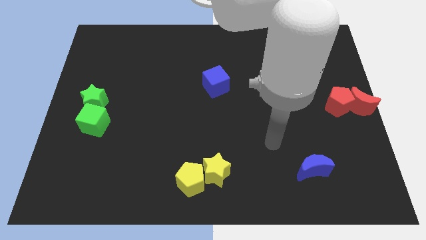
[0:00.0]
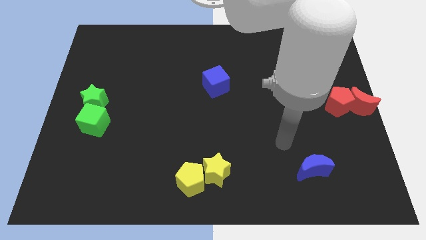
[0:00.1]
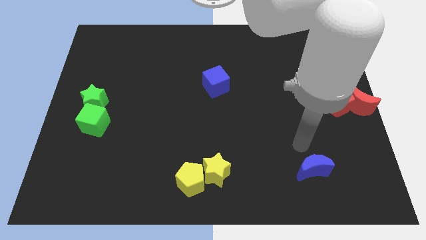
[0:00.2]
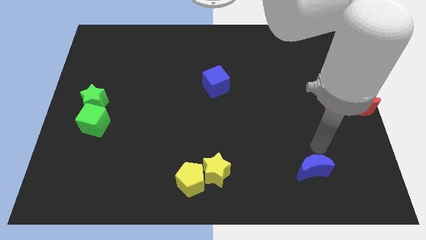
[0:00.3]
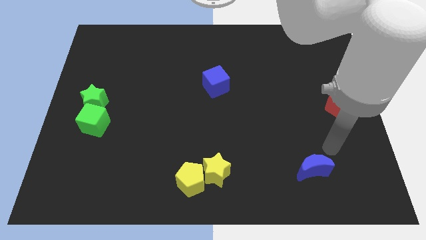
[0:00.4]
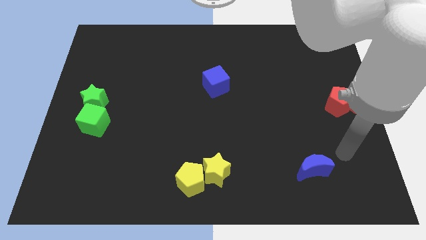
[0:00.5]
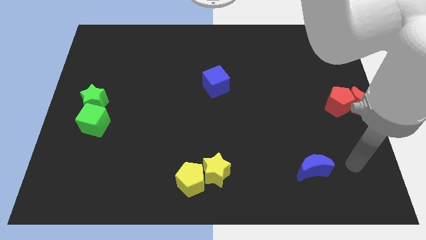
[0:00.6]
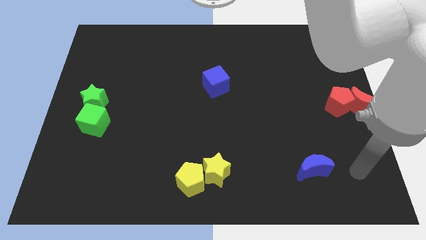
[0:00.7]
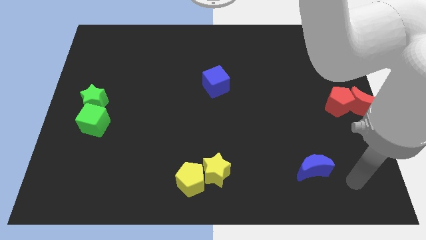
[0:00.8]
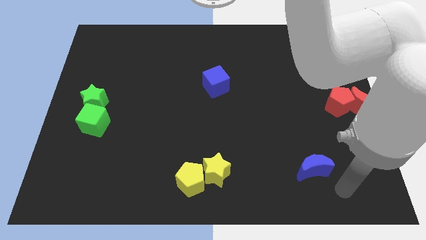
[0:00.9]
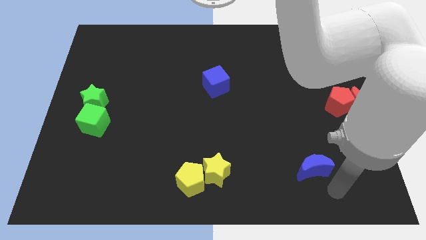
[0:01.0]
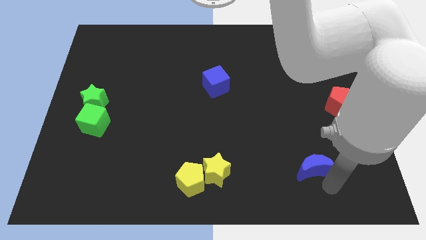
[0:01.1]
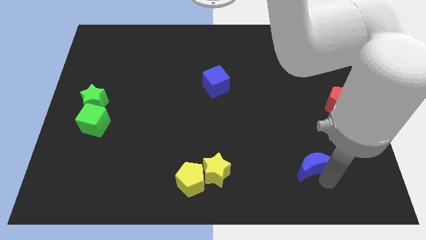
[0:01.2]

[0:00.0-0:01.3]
place the arm into the blue crescent

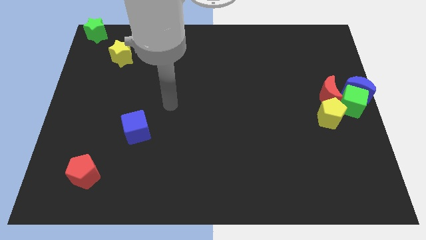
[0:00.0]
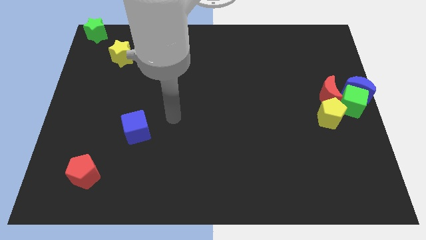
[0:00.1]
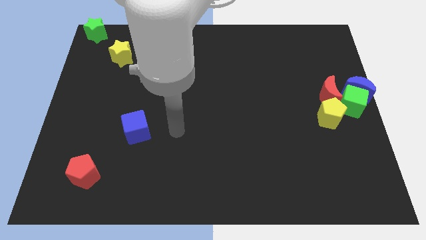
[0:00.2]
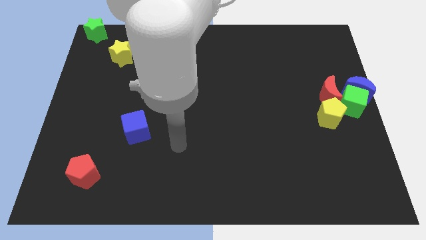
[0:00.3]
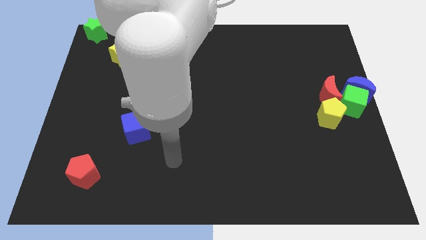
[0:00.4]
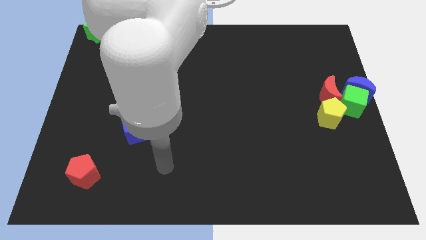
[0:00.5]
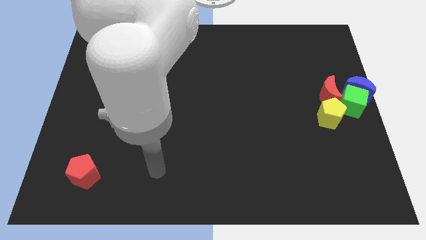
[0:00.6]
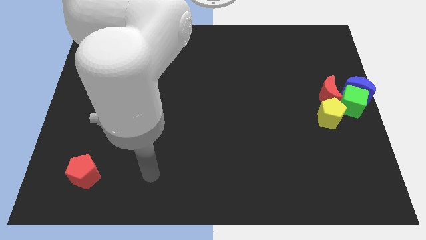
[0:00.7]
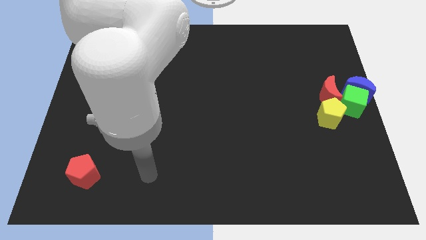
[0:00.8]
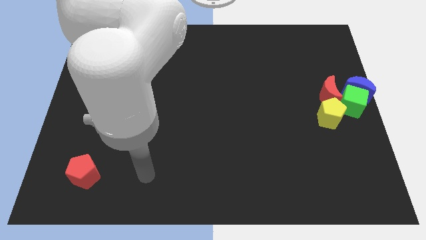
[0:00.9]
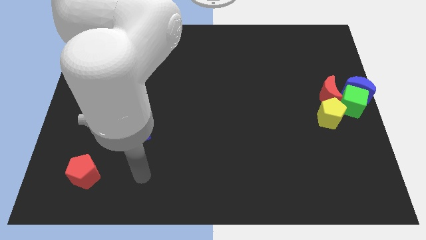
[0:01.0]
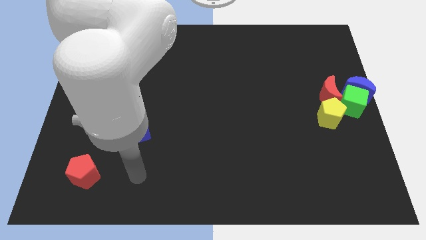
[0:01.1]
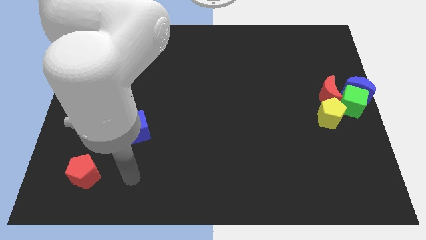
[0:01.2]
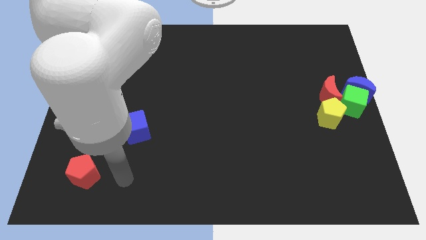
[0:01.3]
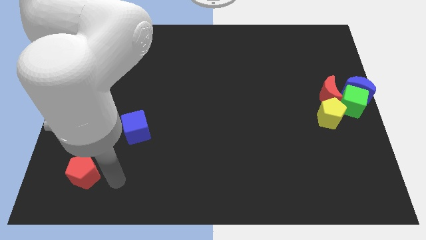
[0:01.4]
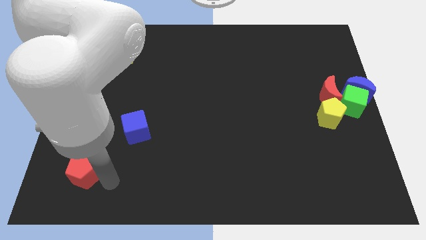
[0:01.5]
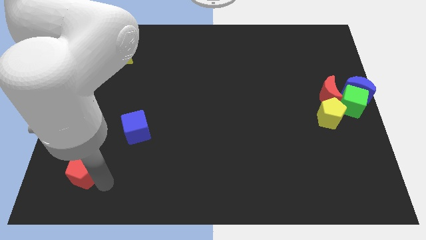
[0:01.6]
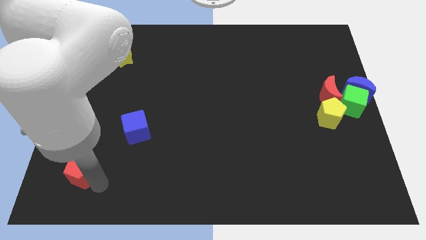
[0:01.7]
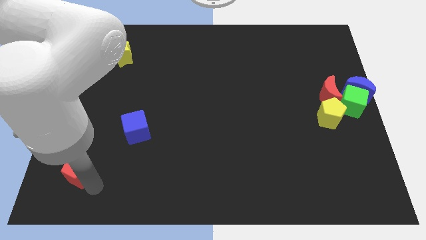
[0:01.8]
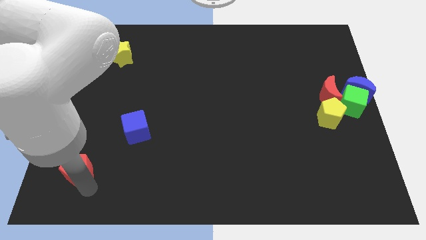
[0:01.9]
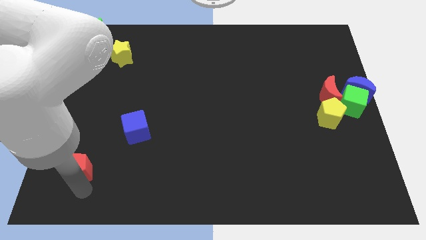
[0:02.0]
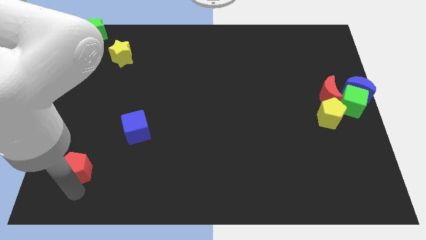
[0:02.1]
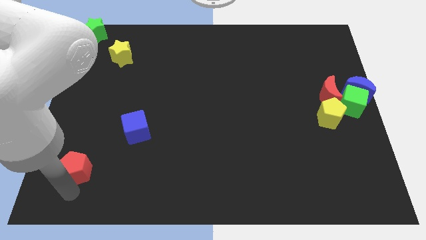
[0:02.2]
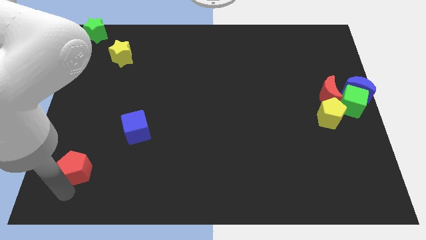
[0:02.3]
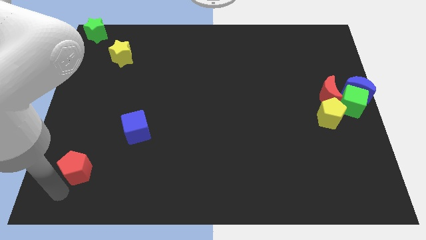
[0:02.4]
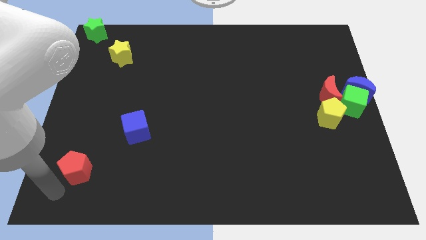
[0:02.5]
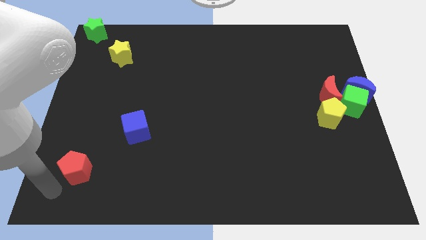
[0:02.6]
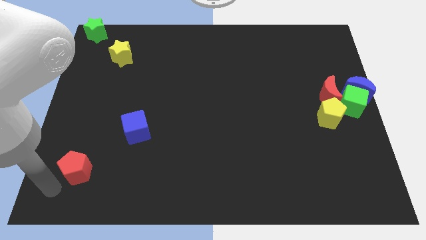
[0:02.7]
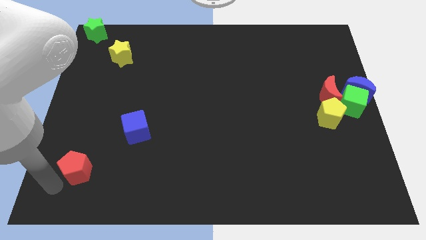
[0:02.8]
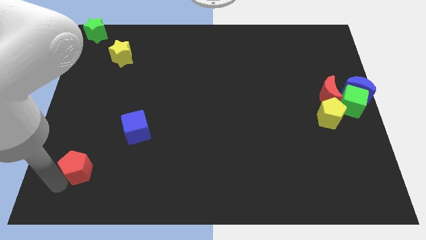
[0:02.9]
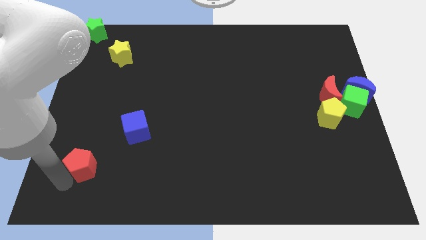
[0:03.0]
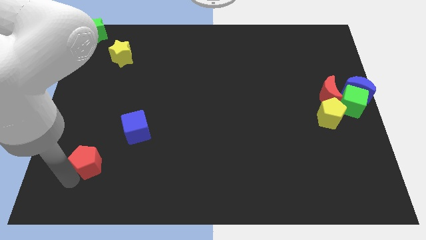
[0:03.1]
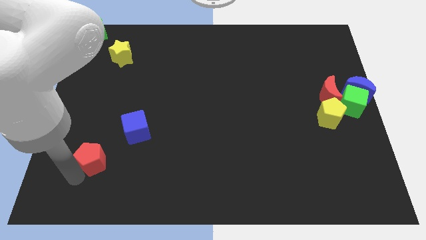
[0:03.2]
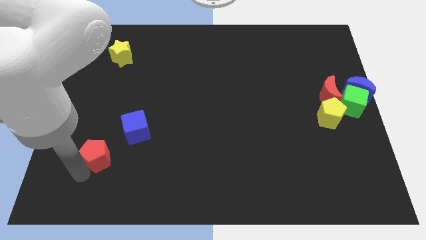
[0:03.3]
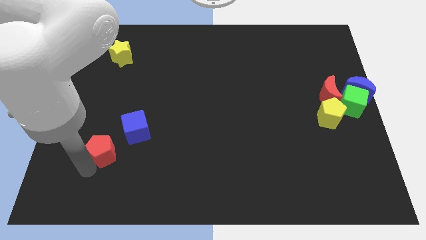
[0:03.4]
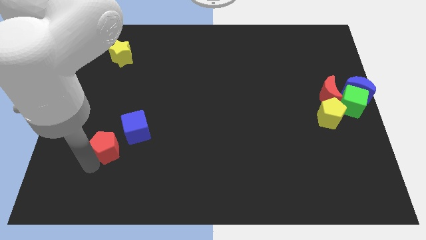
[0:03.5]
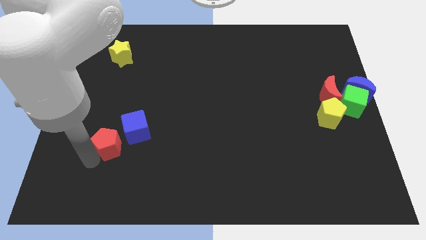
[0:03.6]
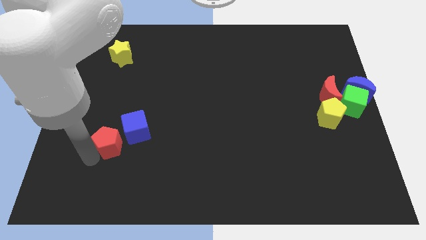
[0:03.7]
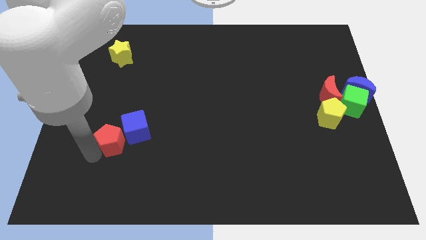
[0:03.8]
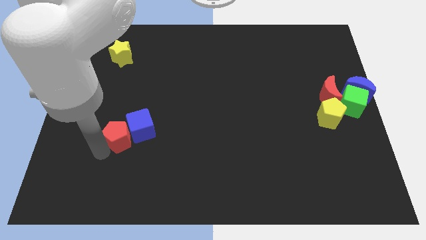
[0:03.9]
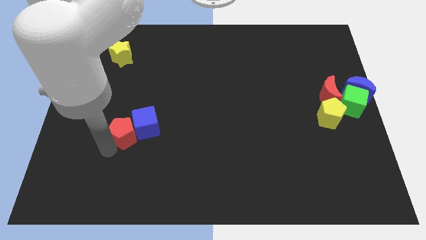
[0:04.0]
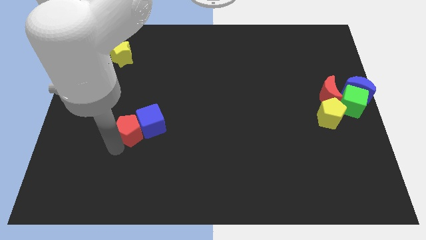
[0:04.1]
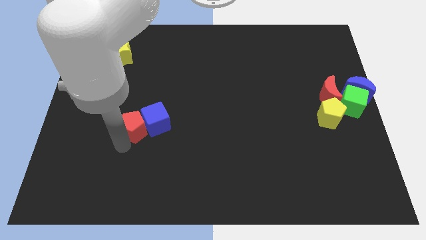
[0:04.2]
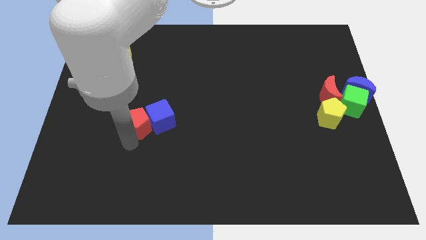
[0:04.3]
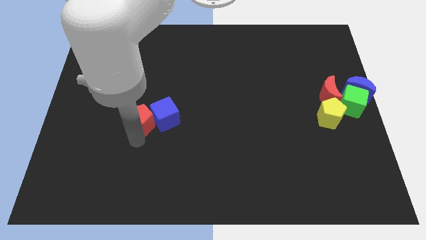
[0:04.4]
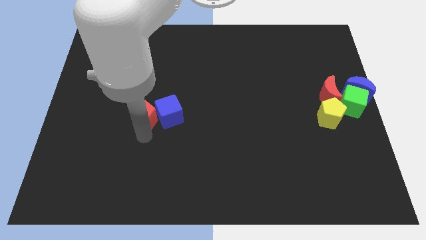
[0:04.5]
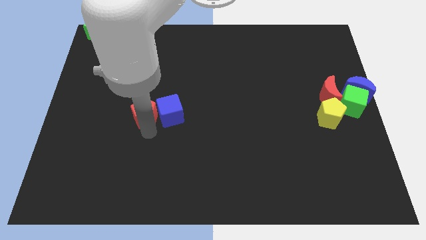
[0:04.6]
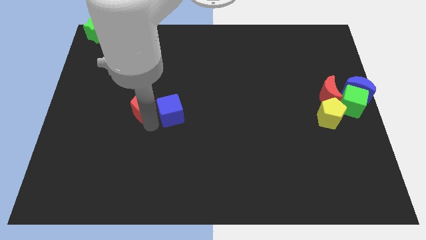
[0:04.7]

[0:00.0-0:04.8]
push the red pentagon to the left of the blue cube

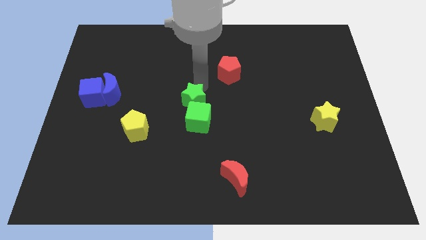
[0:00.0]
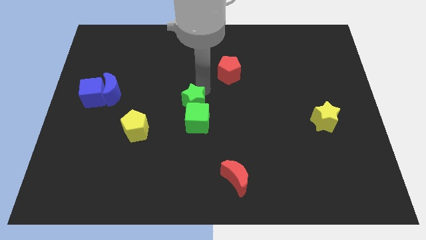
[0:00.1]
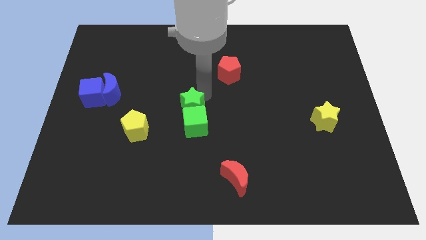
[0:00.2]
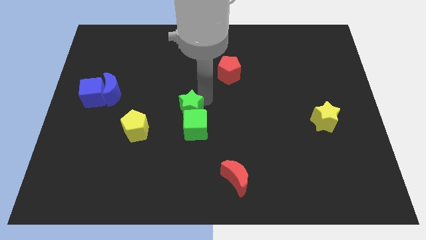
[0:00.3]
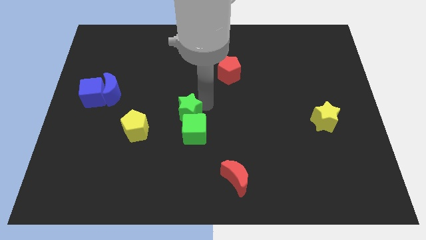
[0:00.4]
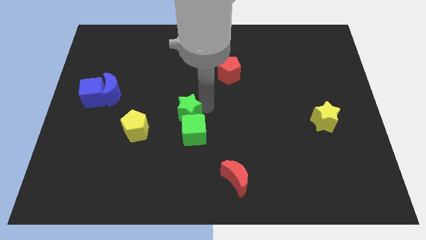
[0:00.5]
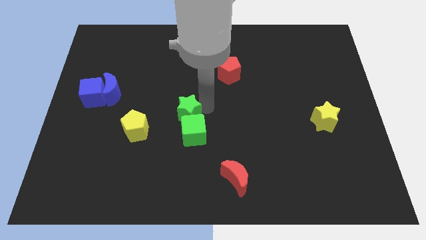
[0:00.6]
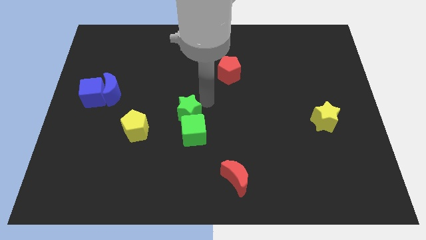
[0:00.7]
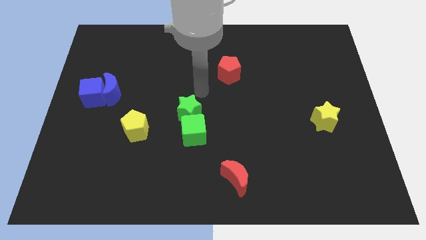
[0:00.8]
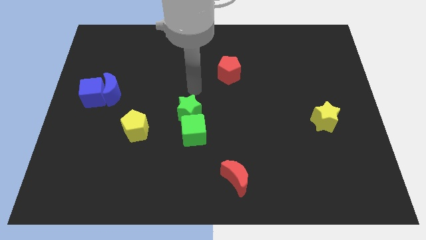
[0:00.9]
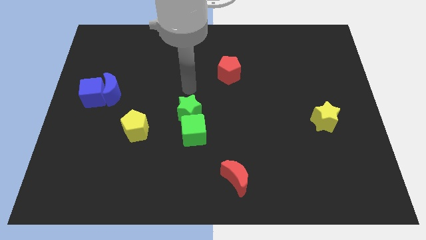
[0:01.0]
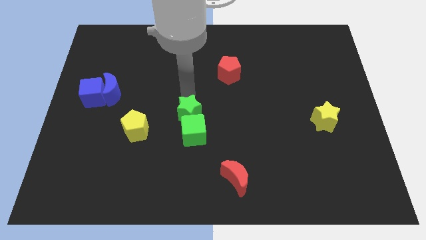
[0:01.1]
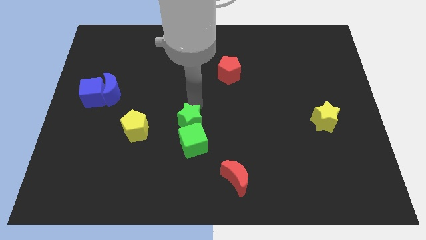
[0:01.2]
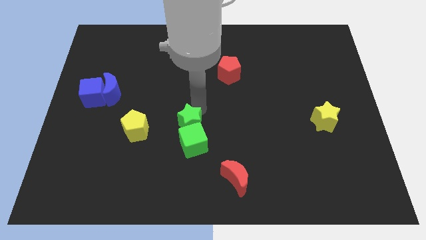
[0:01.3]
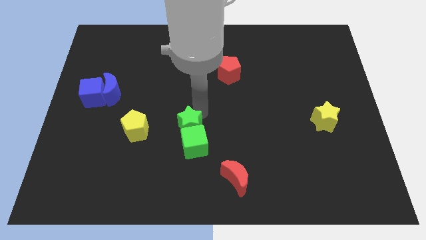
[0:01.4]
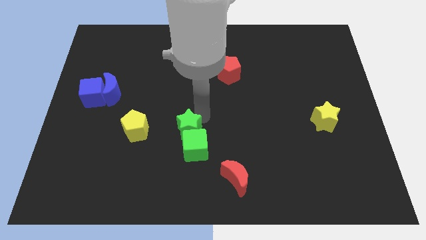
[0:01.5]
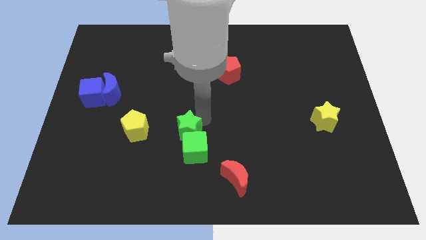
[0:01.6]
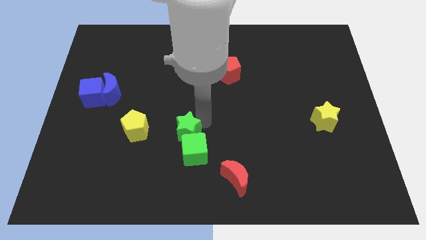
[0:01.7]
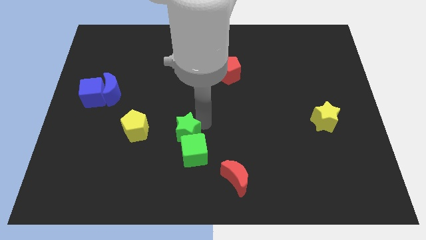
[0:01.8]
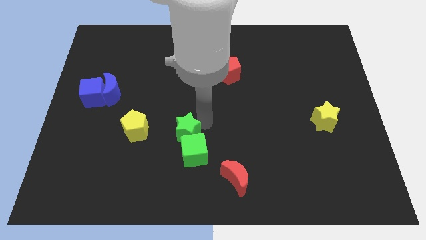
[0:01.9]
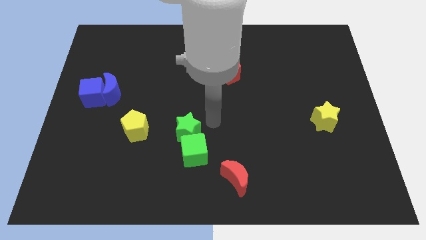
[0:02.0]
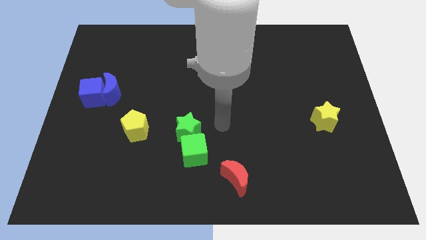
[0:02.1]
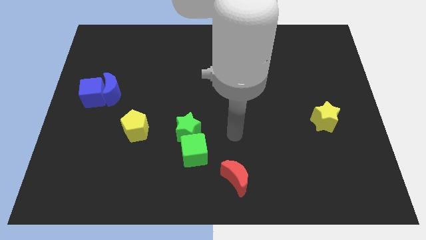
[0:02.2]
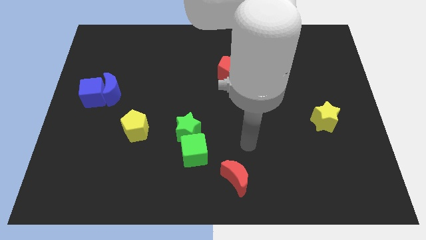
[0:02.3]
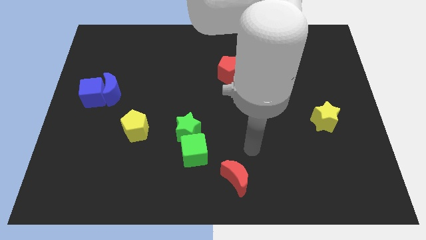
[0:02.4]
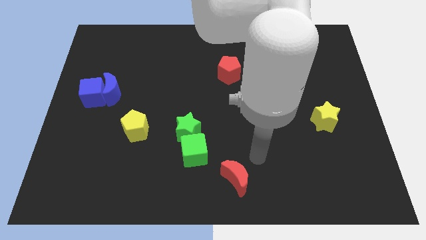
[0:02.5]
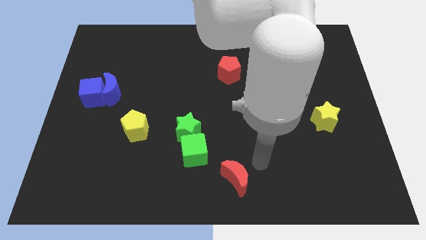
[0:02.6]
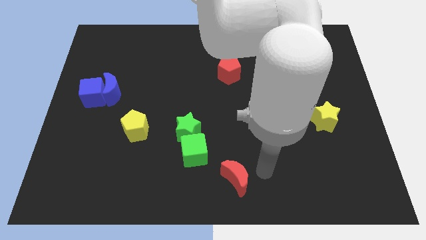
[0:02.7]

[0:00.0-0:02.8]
push the green star and green cube slightly to the bottom

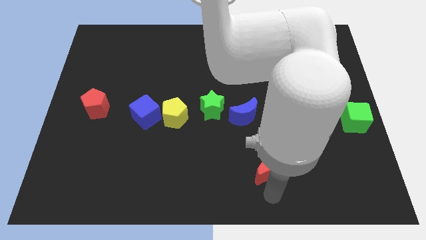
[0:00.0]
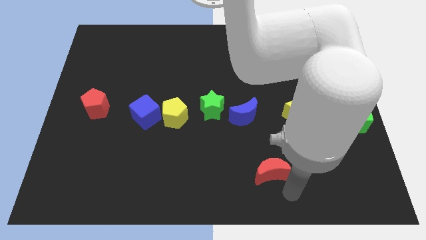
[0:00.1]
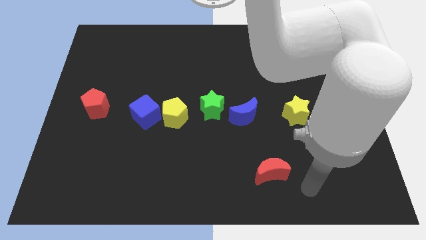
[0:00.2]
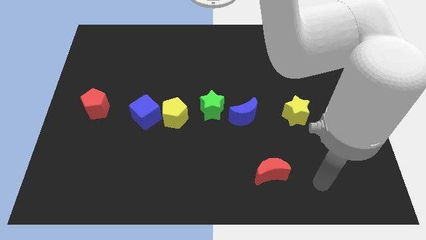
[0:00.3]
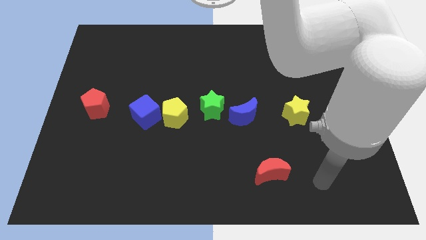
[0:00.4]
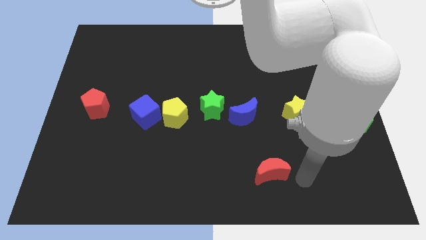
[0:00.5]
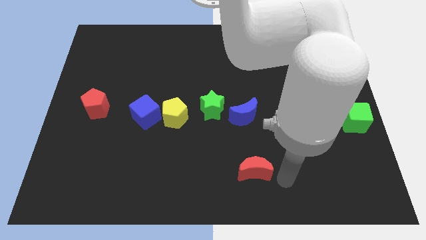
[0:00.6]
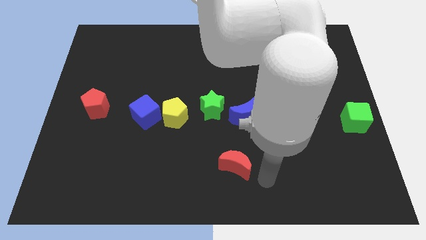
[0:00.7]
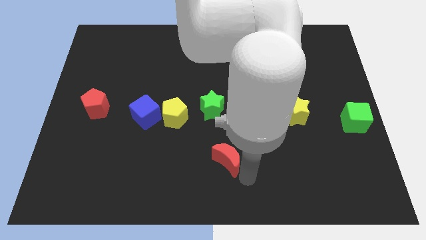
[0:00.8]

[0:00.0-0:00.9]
place the red moon below the blue moon
